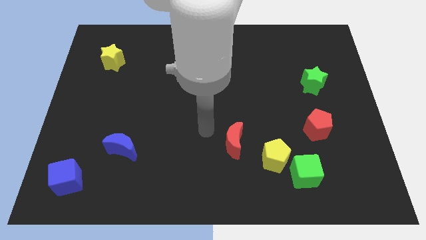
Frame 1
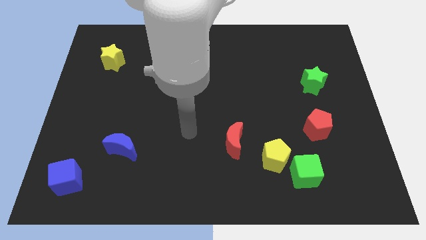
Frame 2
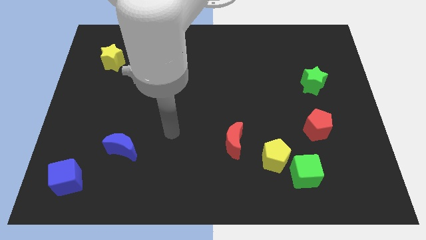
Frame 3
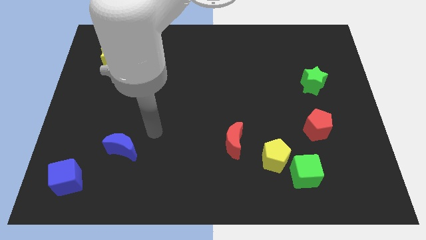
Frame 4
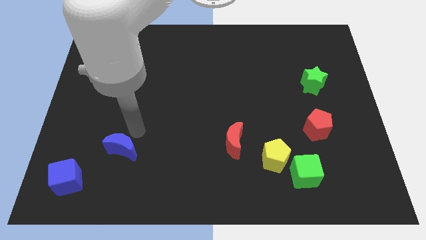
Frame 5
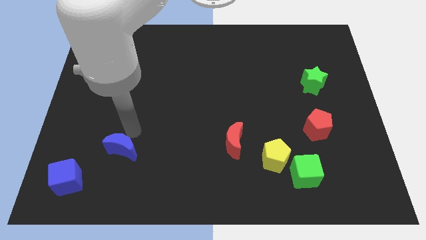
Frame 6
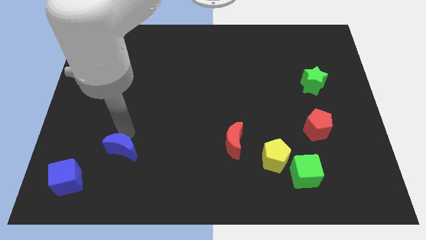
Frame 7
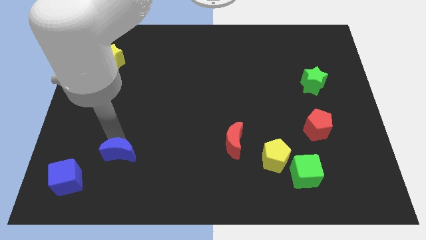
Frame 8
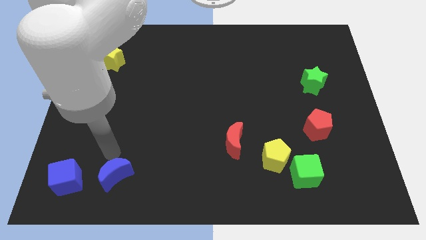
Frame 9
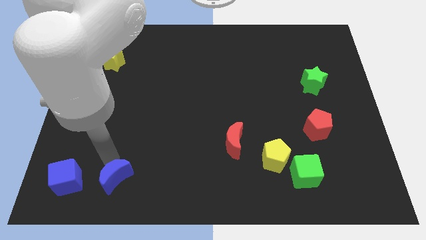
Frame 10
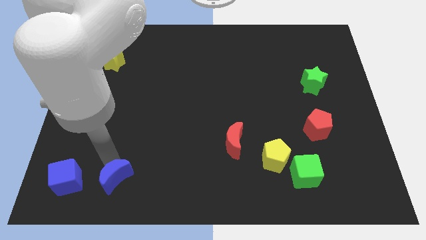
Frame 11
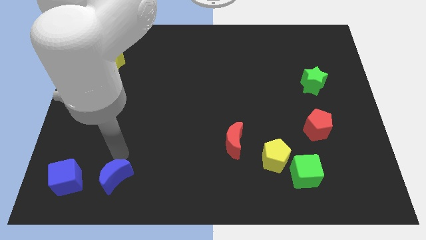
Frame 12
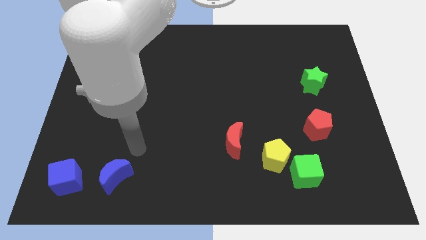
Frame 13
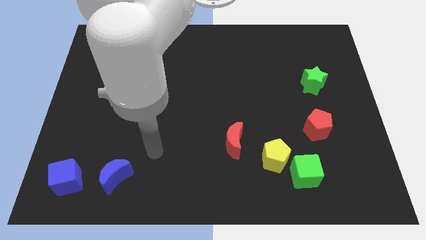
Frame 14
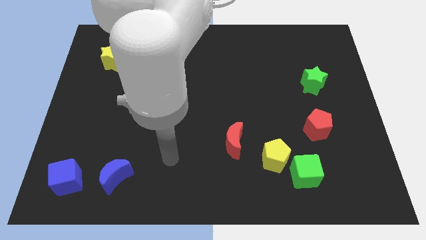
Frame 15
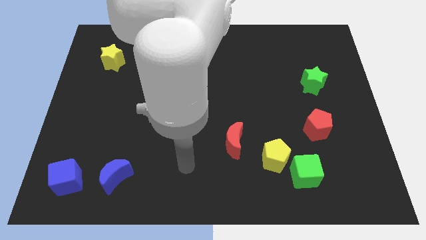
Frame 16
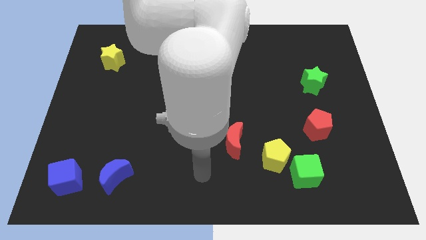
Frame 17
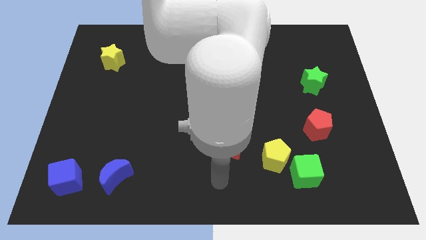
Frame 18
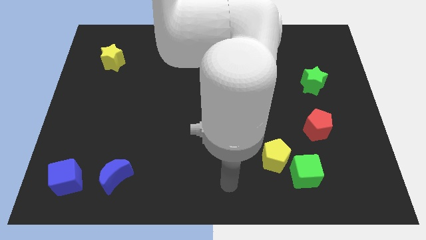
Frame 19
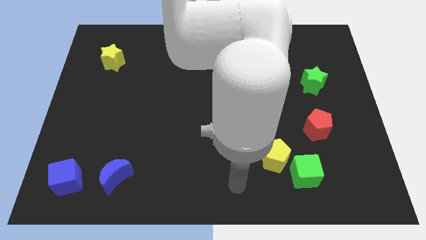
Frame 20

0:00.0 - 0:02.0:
place blue moon to the right of blue cube

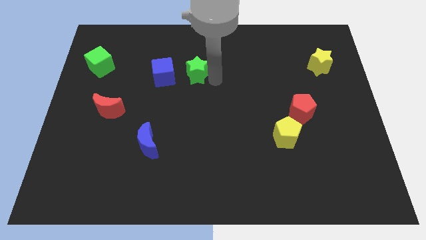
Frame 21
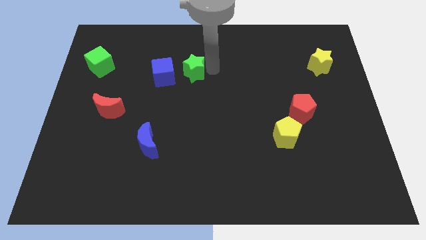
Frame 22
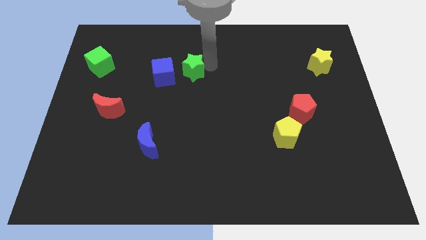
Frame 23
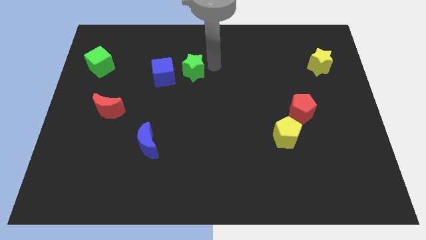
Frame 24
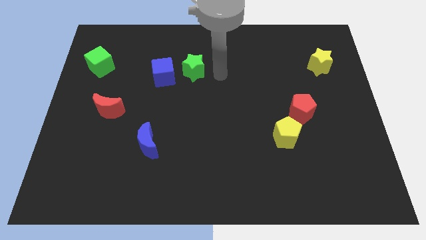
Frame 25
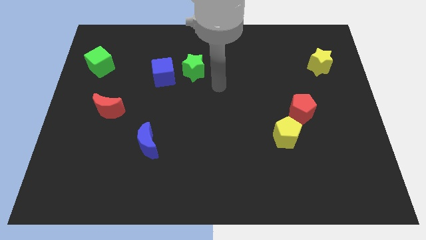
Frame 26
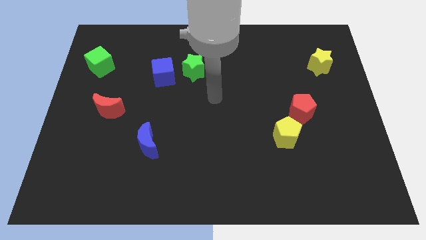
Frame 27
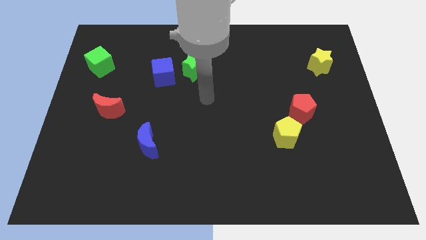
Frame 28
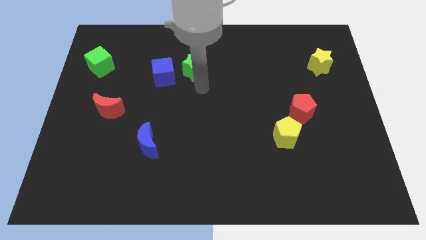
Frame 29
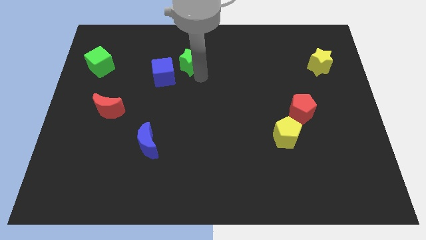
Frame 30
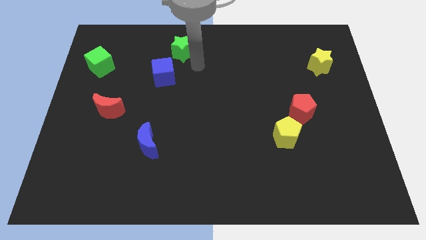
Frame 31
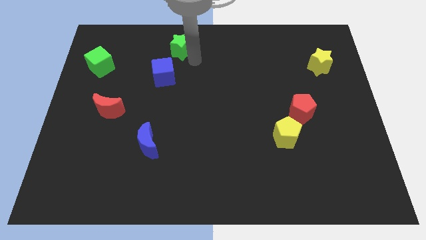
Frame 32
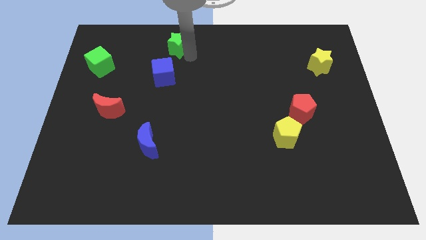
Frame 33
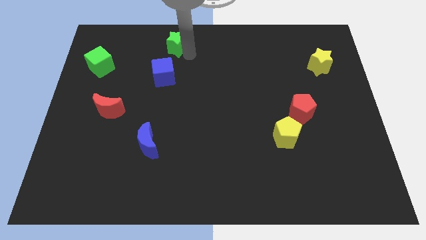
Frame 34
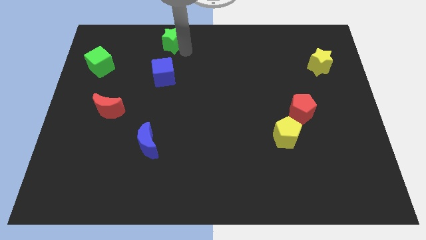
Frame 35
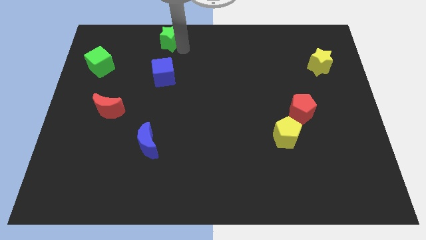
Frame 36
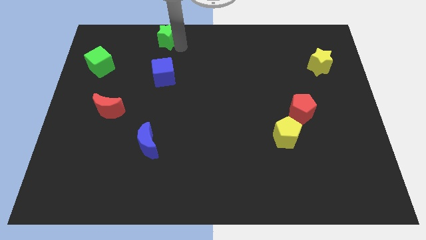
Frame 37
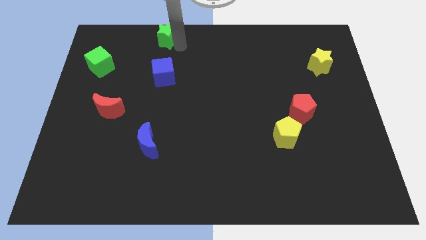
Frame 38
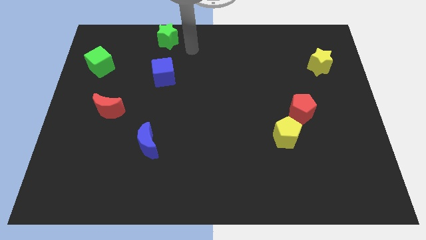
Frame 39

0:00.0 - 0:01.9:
move the green star to the top side of the blue cube

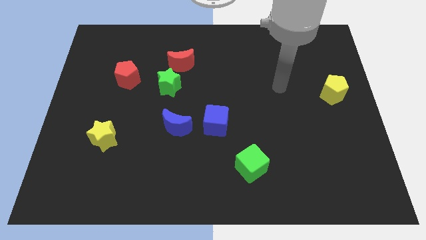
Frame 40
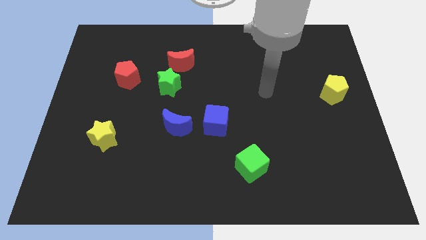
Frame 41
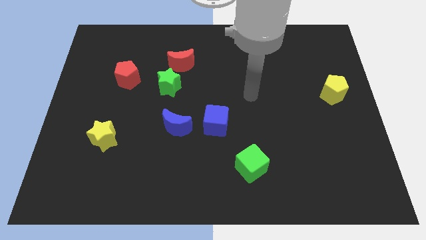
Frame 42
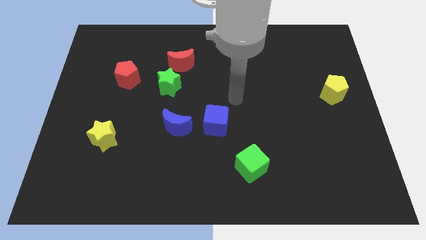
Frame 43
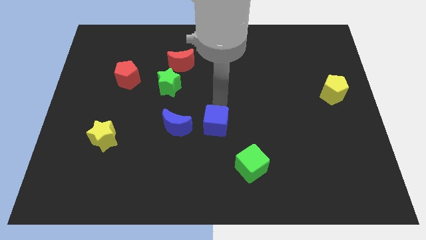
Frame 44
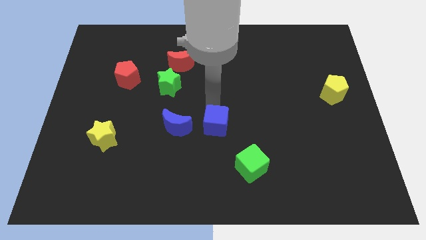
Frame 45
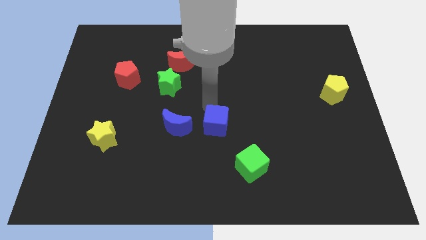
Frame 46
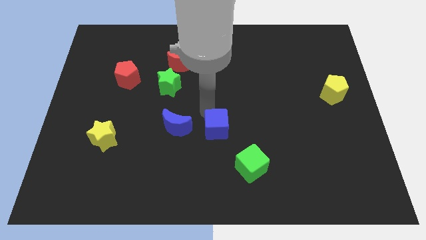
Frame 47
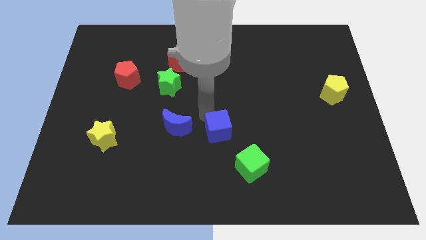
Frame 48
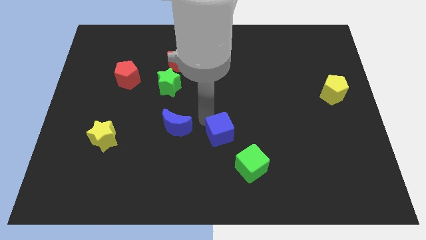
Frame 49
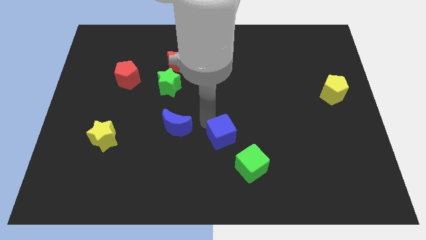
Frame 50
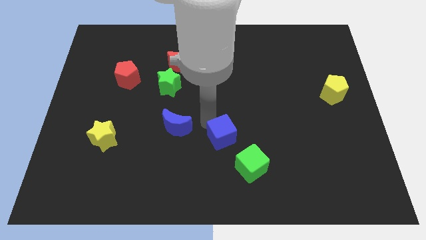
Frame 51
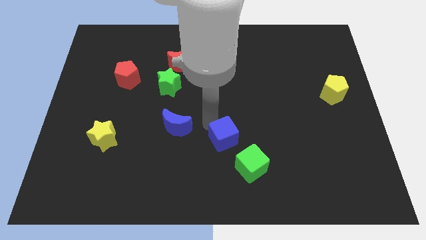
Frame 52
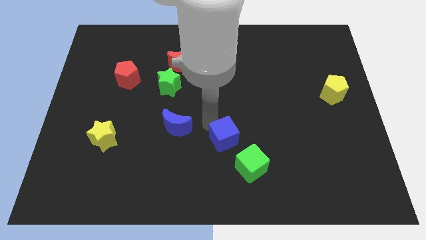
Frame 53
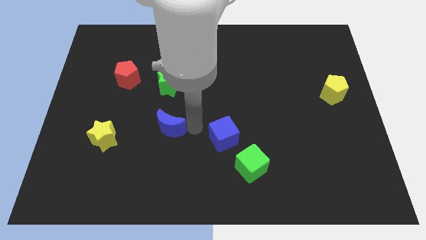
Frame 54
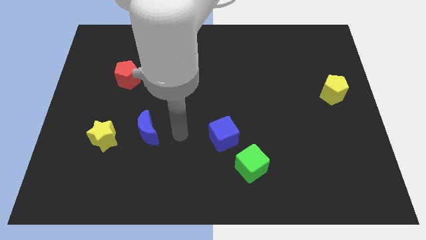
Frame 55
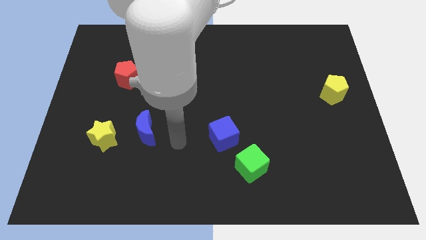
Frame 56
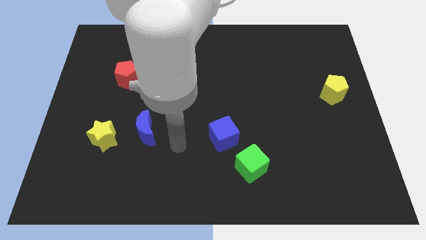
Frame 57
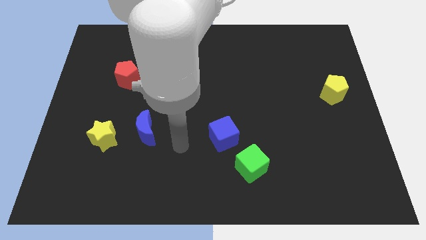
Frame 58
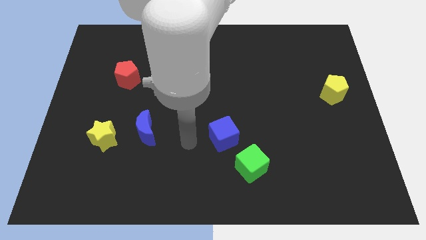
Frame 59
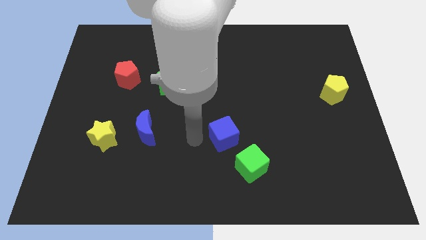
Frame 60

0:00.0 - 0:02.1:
separate blue blocks from each other

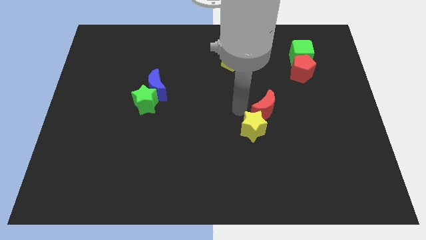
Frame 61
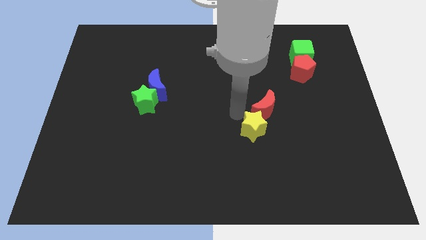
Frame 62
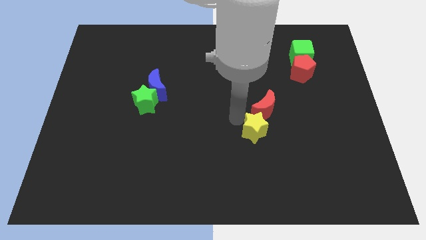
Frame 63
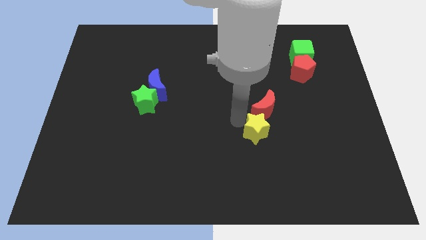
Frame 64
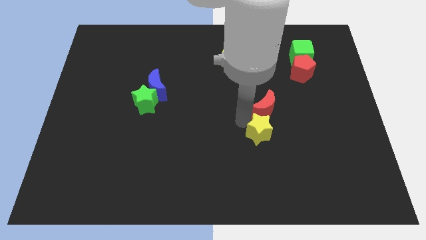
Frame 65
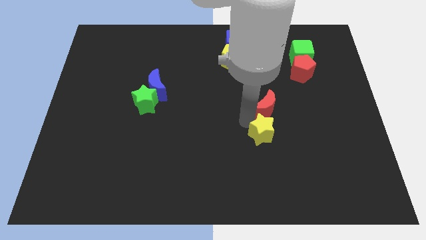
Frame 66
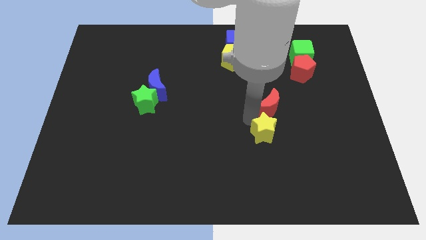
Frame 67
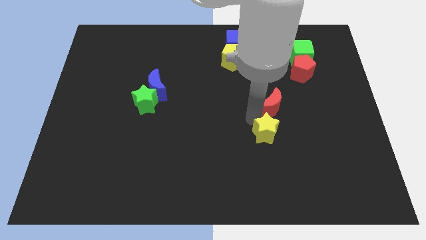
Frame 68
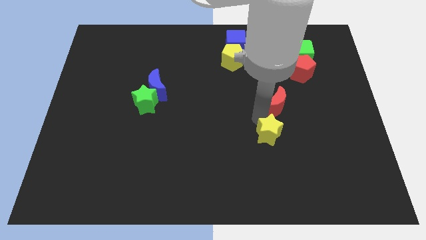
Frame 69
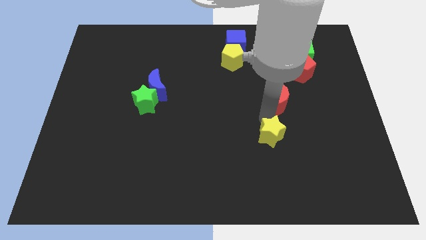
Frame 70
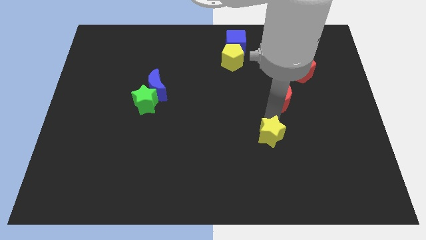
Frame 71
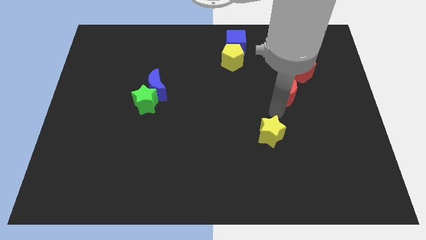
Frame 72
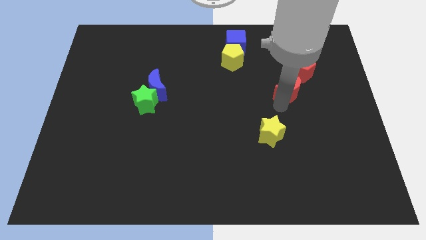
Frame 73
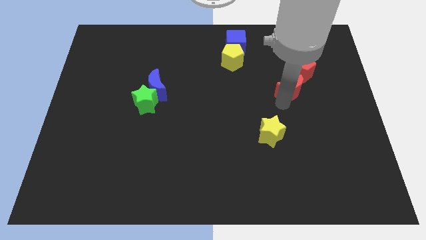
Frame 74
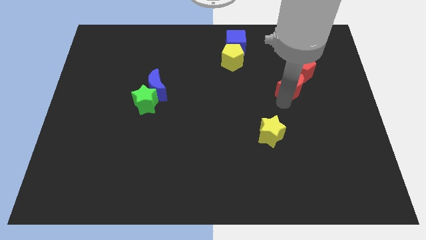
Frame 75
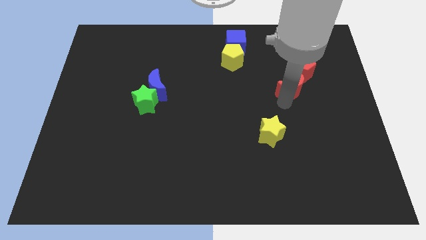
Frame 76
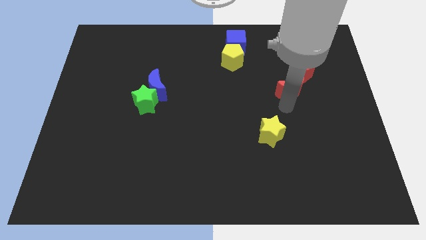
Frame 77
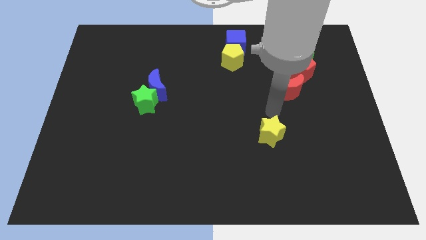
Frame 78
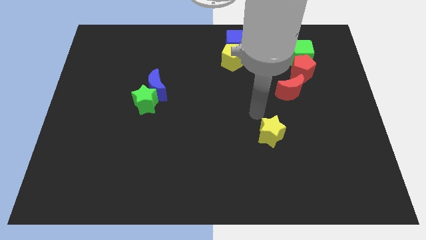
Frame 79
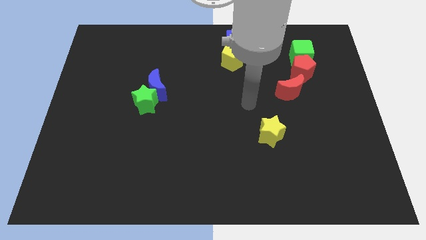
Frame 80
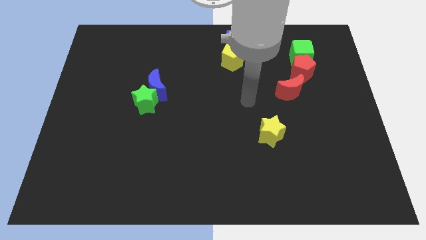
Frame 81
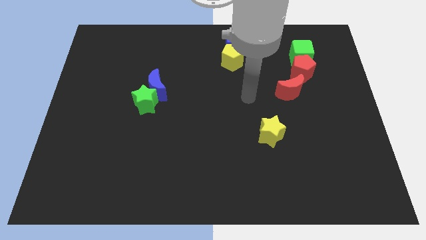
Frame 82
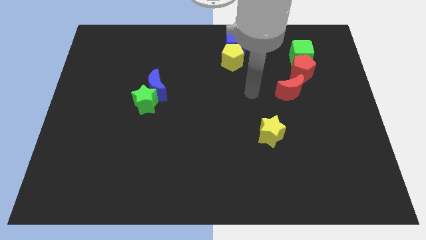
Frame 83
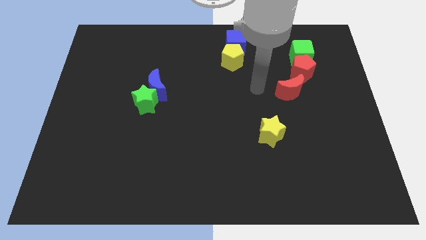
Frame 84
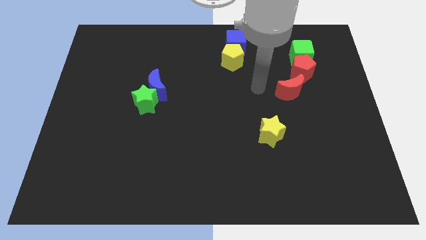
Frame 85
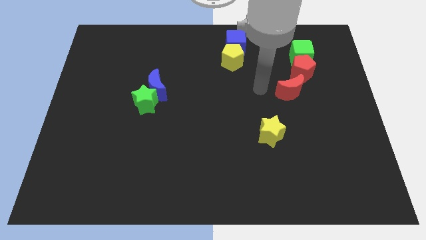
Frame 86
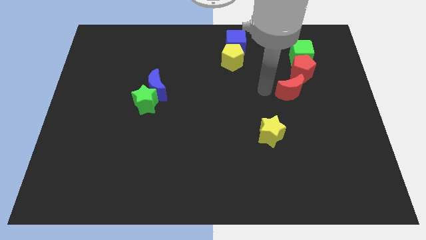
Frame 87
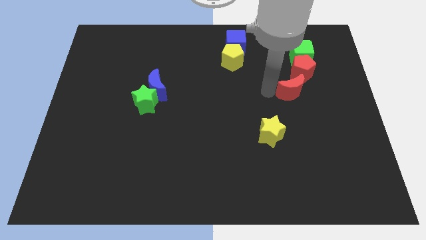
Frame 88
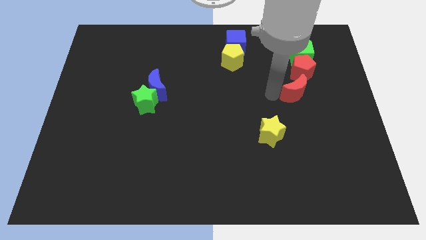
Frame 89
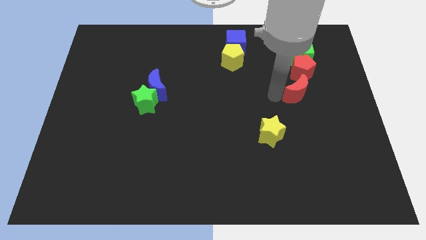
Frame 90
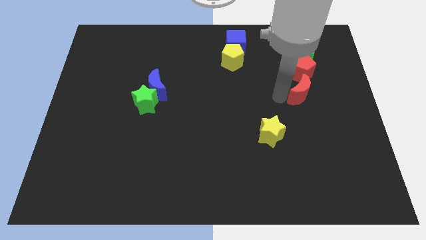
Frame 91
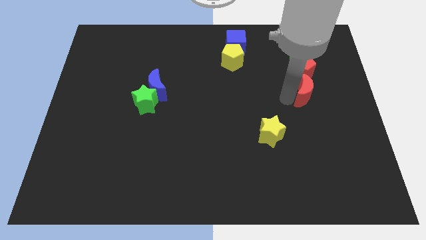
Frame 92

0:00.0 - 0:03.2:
put the red crescent below the red pentagon
